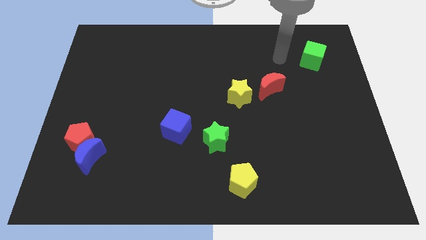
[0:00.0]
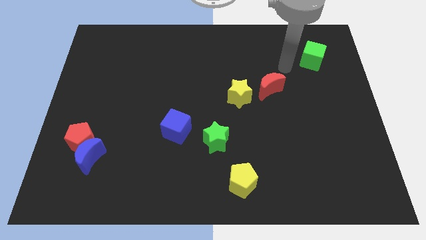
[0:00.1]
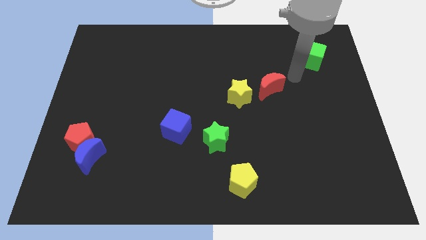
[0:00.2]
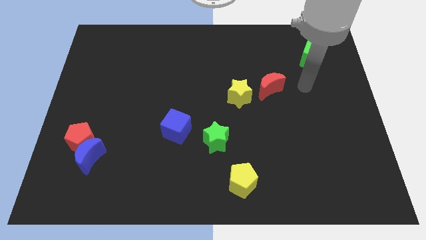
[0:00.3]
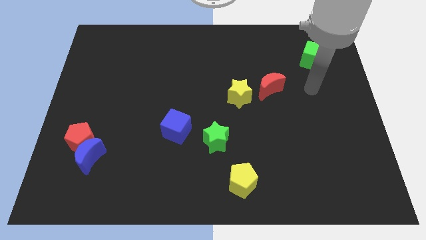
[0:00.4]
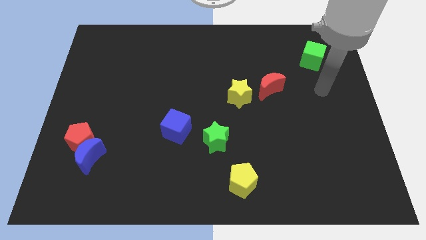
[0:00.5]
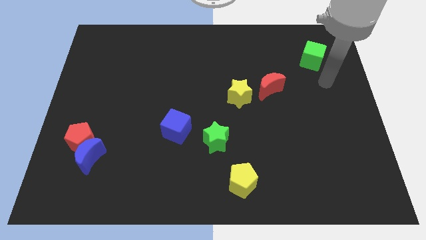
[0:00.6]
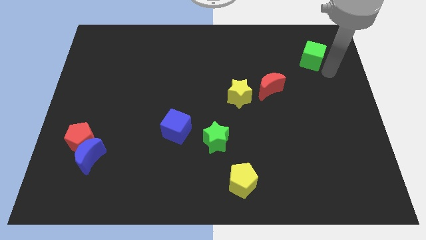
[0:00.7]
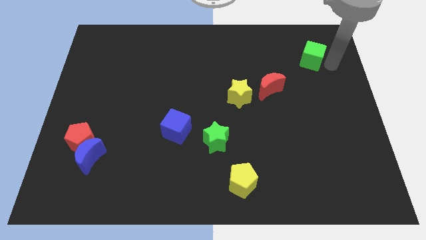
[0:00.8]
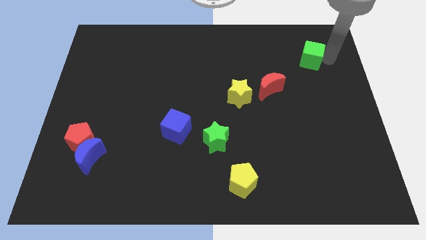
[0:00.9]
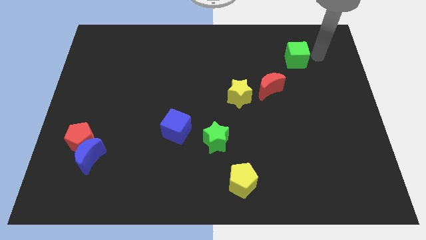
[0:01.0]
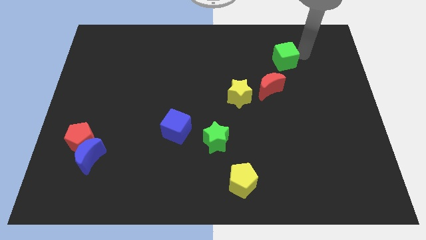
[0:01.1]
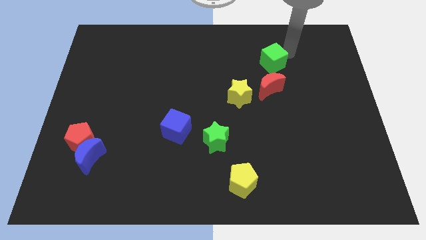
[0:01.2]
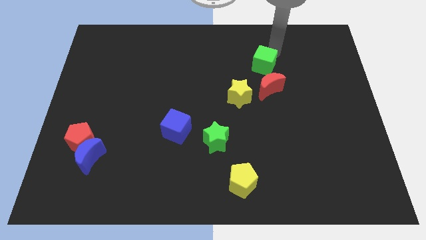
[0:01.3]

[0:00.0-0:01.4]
place the green cube above the red crescent

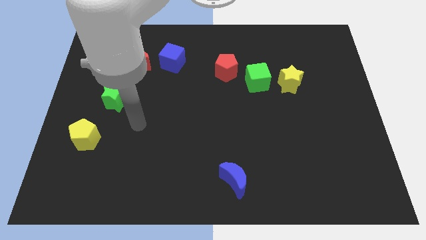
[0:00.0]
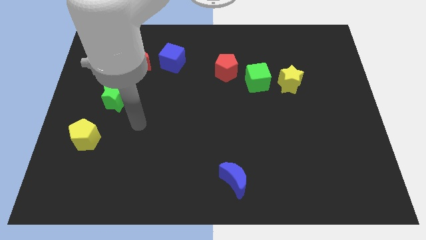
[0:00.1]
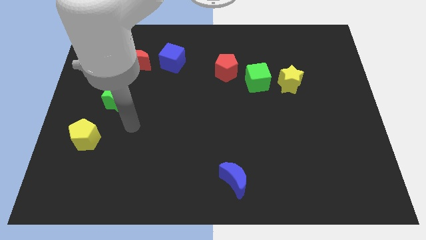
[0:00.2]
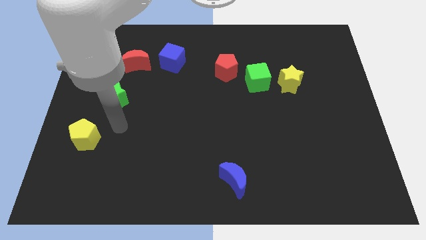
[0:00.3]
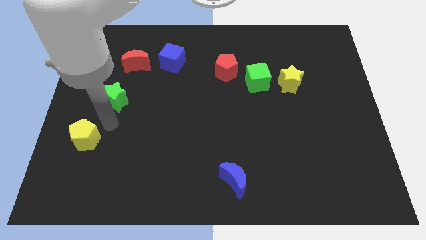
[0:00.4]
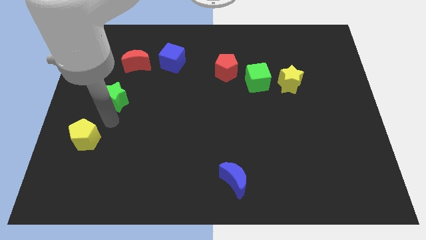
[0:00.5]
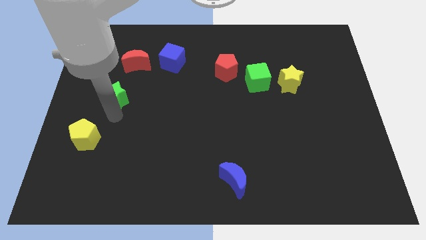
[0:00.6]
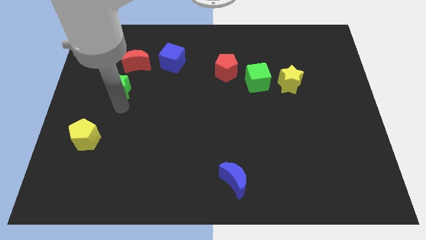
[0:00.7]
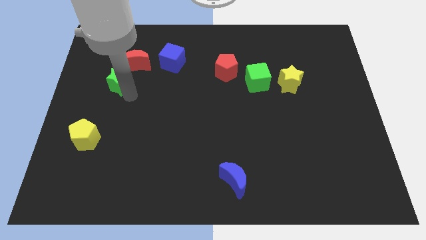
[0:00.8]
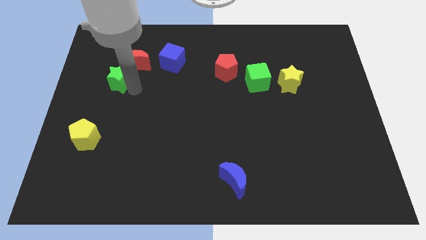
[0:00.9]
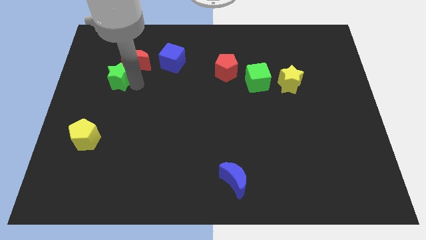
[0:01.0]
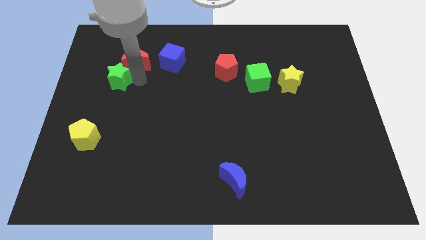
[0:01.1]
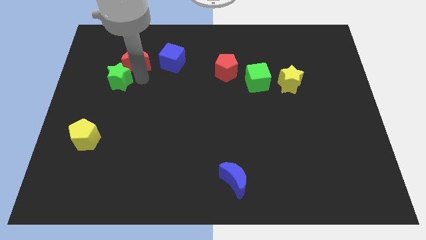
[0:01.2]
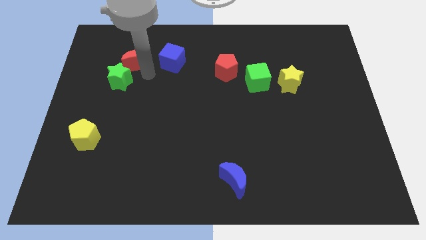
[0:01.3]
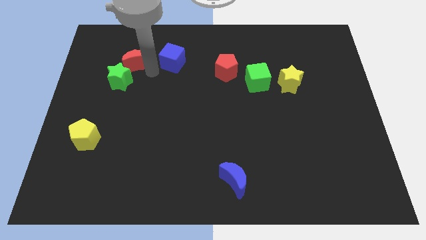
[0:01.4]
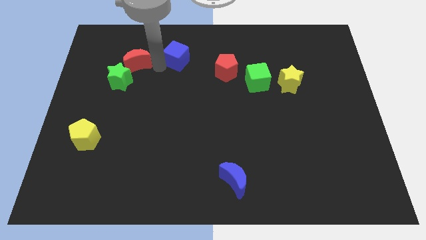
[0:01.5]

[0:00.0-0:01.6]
place green star close to red crescent

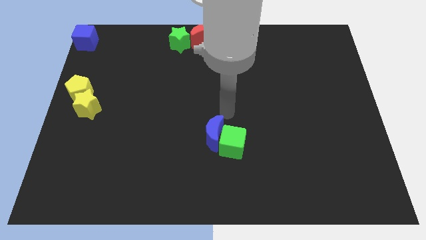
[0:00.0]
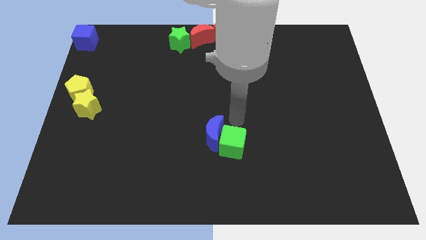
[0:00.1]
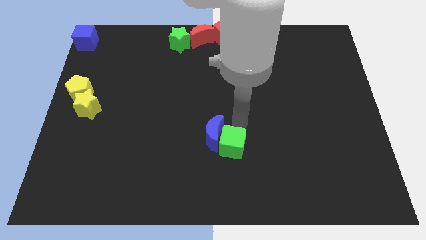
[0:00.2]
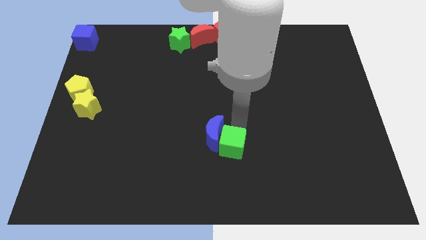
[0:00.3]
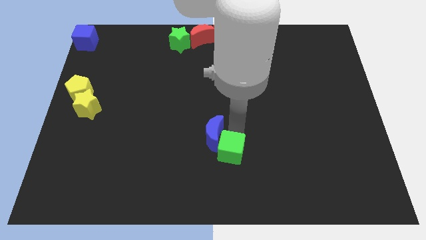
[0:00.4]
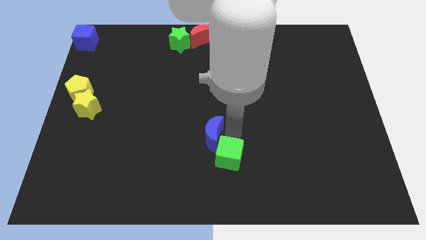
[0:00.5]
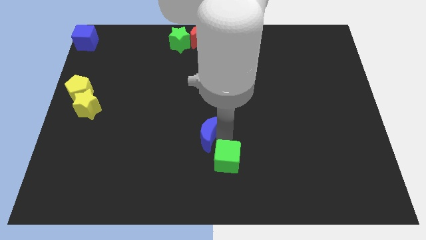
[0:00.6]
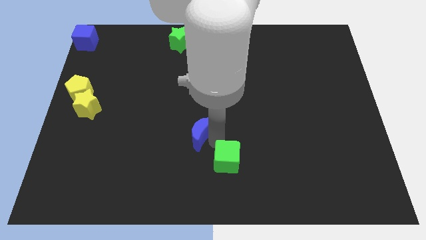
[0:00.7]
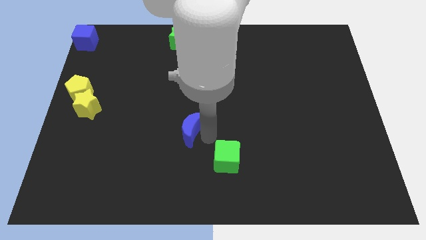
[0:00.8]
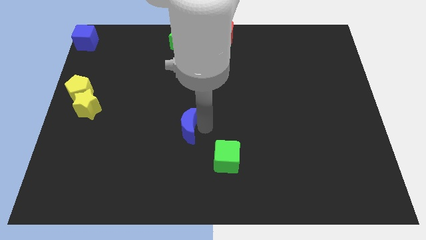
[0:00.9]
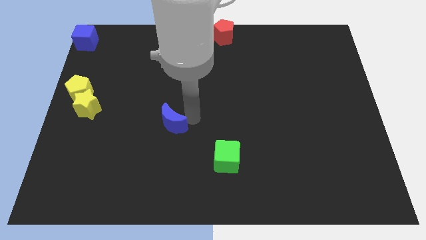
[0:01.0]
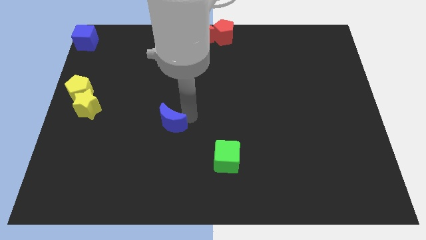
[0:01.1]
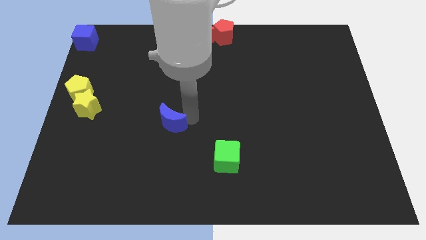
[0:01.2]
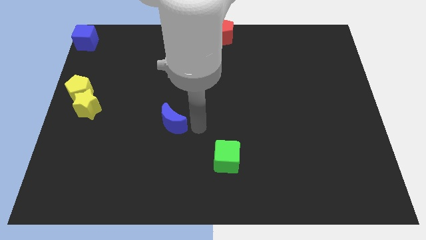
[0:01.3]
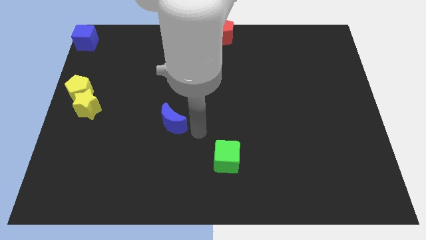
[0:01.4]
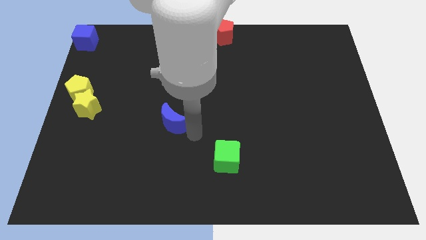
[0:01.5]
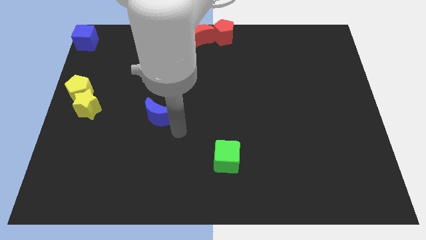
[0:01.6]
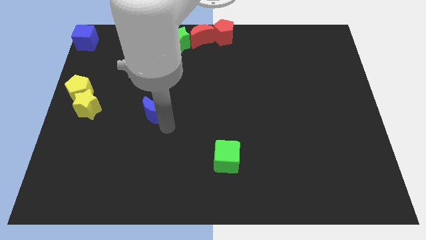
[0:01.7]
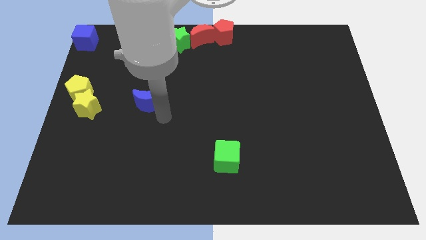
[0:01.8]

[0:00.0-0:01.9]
separate the blue crescent from the green cube

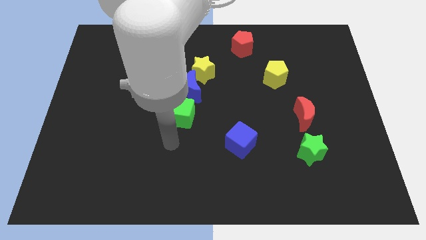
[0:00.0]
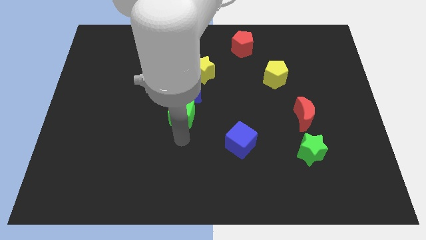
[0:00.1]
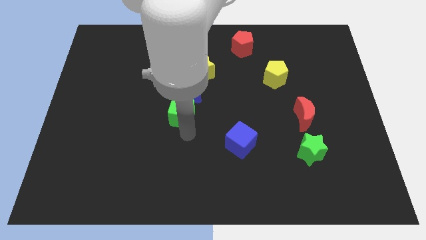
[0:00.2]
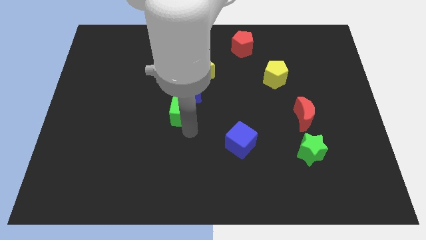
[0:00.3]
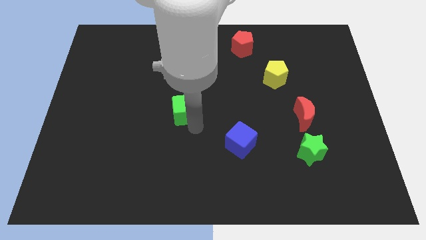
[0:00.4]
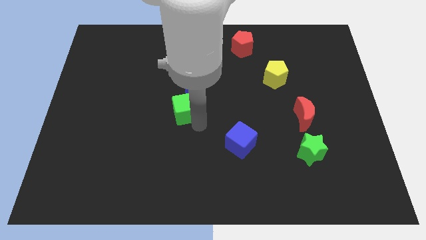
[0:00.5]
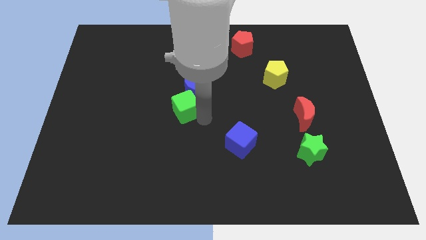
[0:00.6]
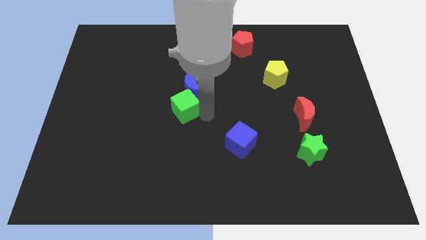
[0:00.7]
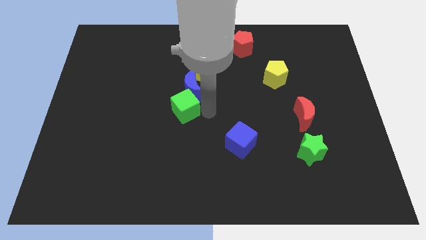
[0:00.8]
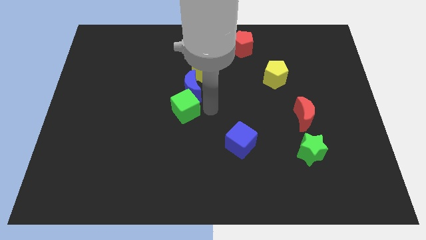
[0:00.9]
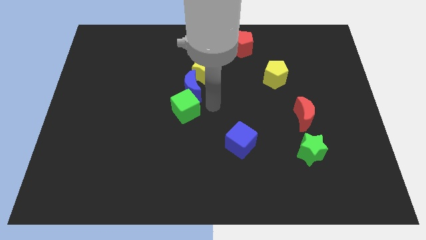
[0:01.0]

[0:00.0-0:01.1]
slide green cube into blue moon

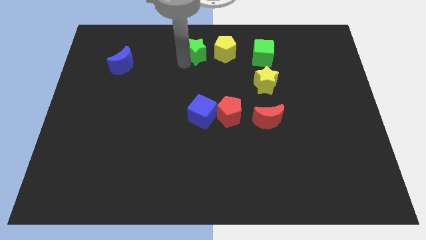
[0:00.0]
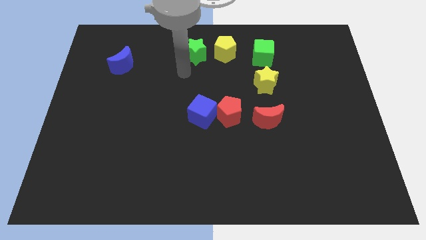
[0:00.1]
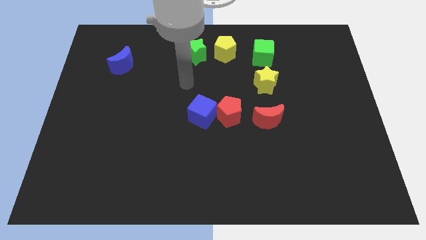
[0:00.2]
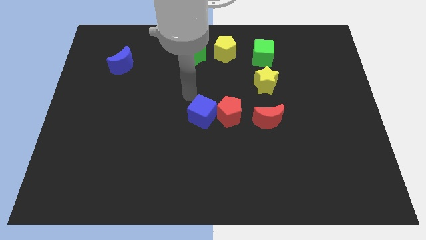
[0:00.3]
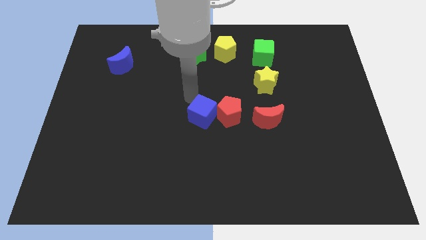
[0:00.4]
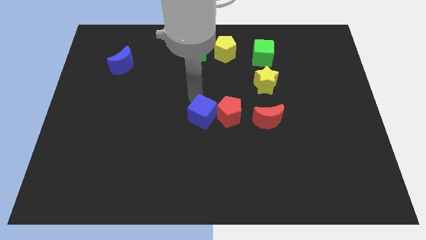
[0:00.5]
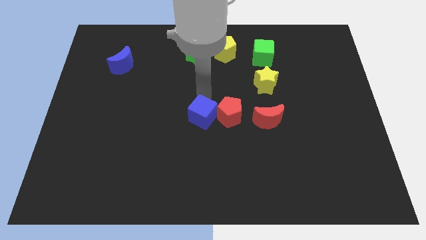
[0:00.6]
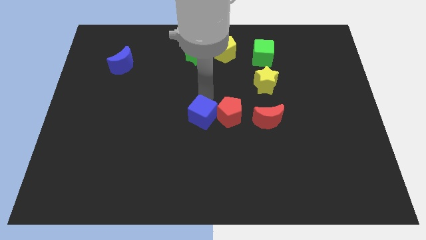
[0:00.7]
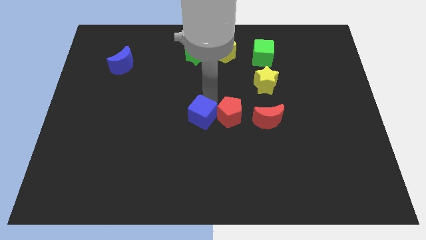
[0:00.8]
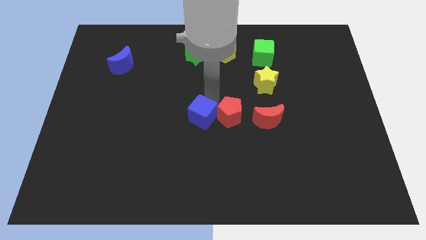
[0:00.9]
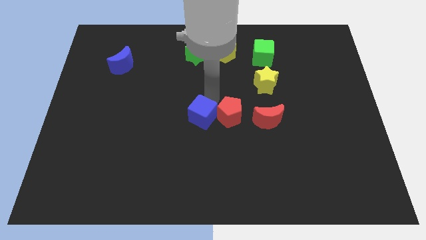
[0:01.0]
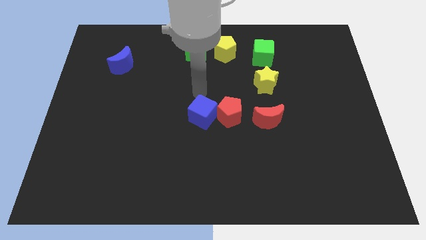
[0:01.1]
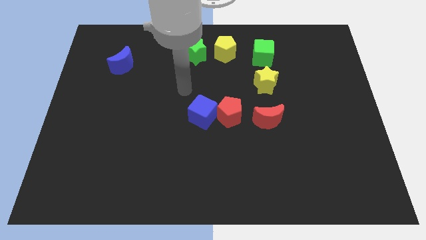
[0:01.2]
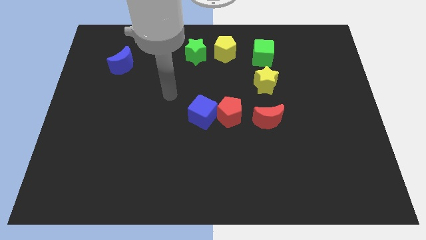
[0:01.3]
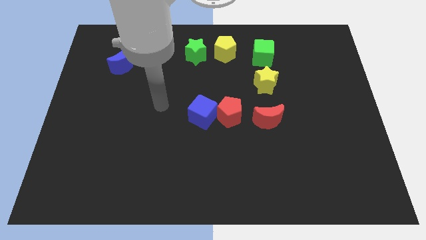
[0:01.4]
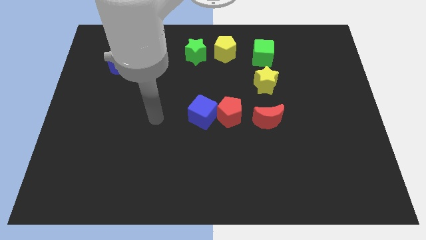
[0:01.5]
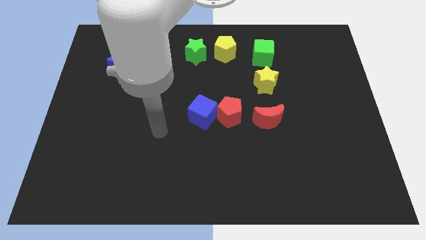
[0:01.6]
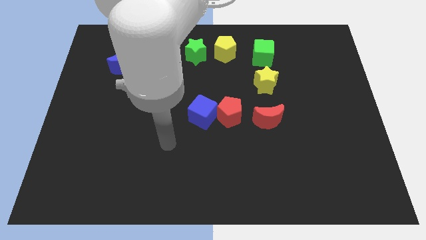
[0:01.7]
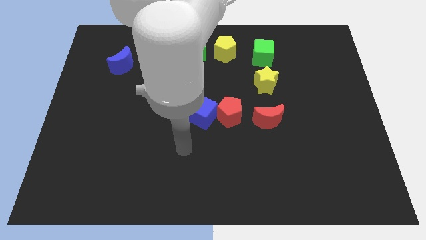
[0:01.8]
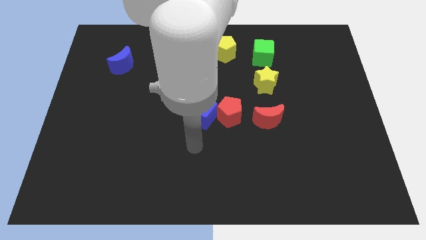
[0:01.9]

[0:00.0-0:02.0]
move your arm away from the green star

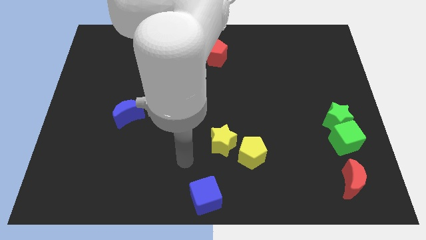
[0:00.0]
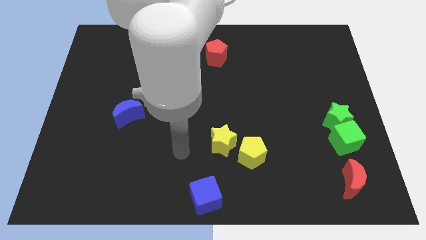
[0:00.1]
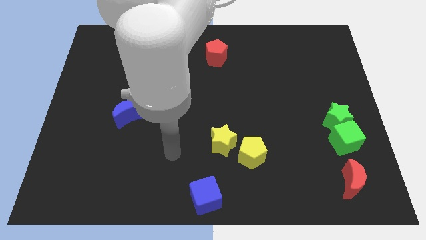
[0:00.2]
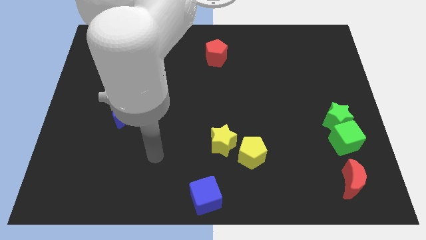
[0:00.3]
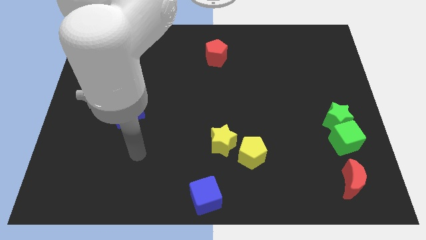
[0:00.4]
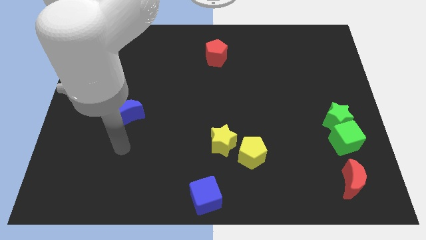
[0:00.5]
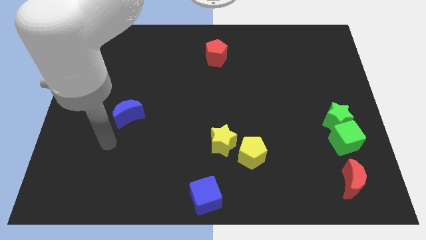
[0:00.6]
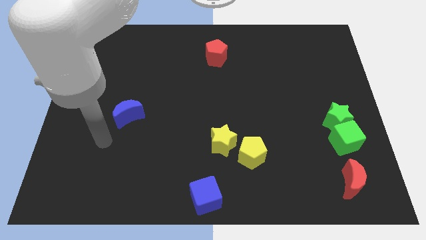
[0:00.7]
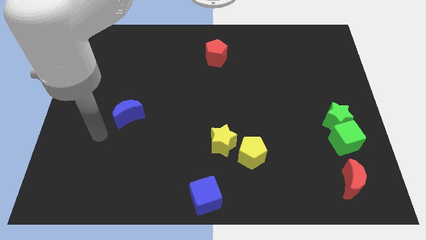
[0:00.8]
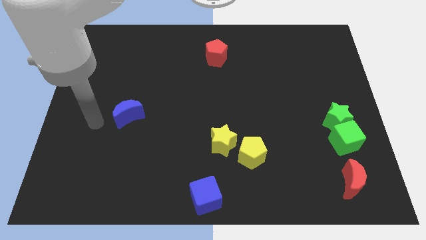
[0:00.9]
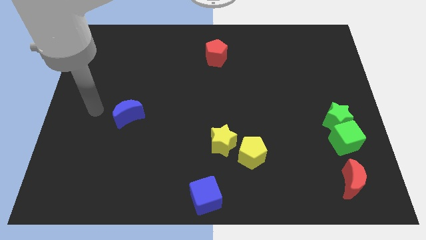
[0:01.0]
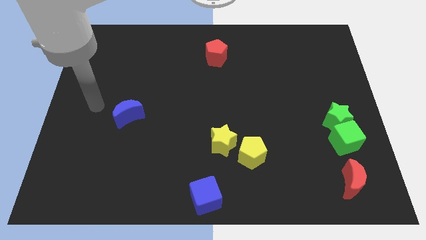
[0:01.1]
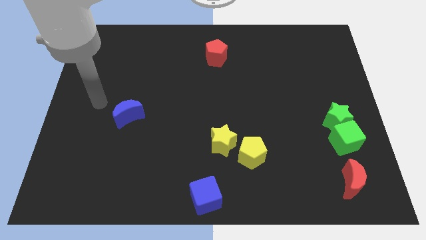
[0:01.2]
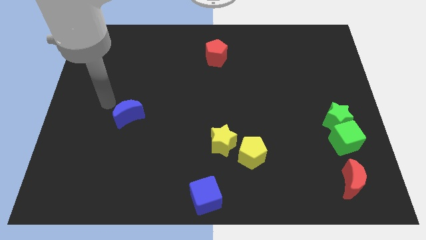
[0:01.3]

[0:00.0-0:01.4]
move your arm away from the blue cube
